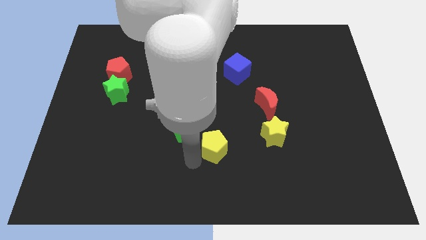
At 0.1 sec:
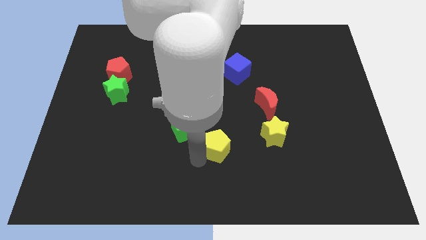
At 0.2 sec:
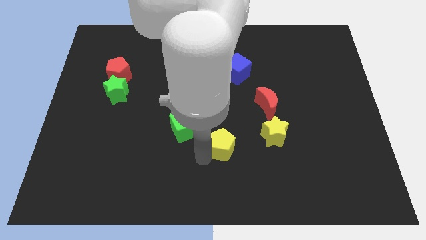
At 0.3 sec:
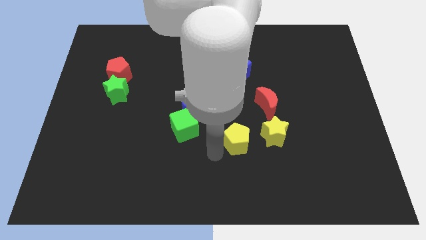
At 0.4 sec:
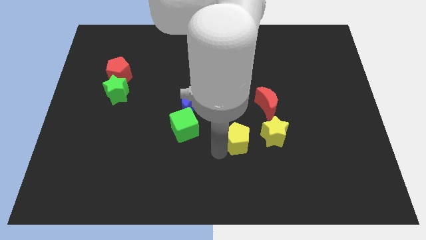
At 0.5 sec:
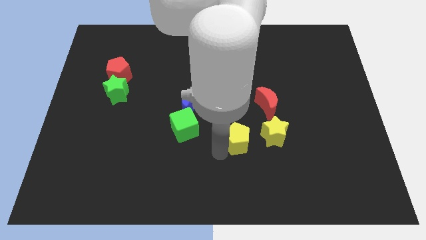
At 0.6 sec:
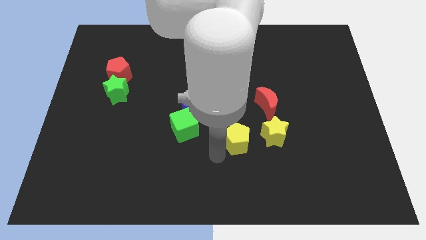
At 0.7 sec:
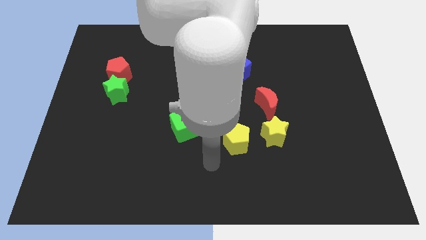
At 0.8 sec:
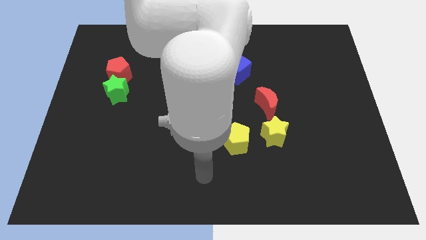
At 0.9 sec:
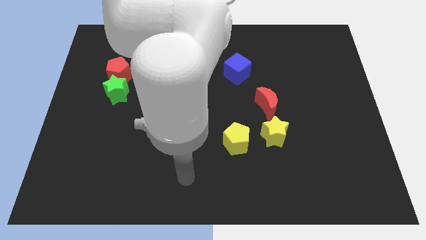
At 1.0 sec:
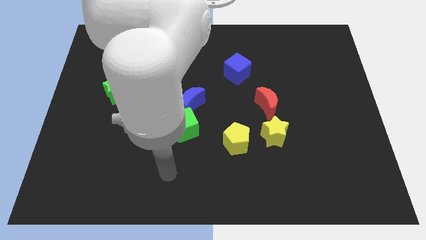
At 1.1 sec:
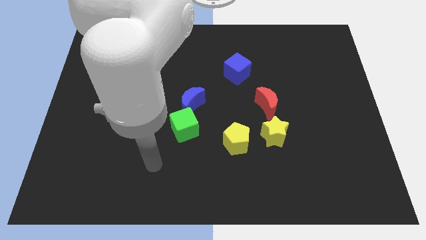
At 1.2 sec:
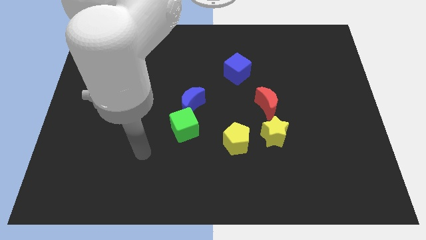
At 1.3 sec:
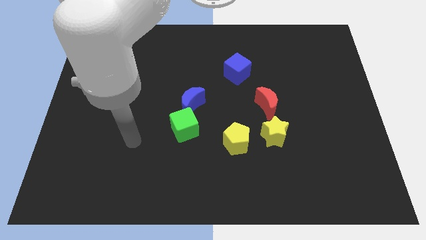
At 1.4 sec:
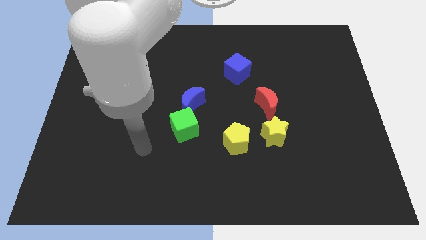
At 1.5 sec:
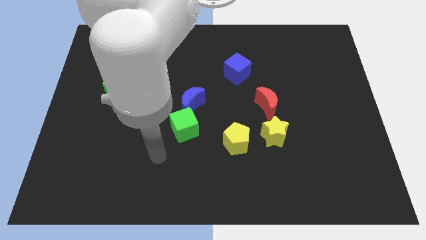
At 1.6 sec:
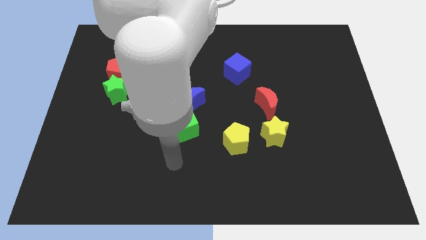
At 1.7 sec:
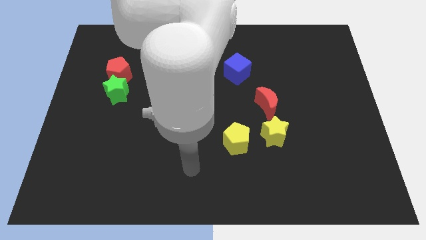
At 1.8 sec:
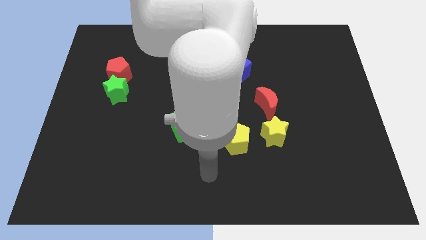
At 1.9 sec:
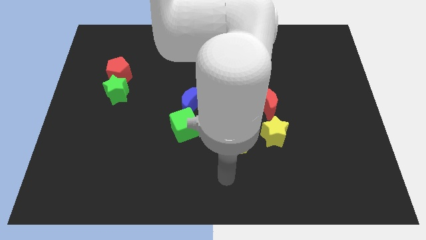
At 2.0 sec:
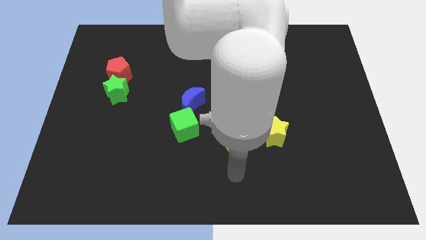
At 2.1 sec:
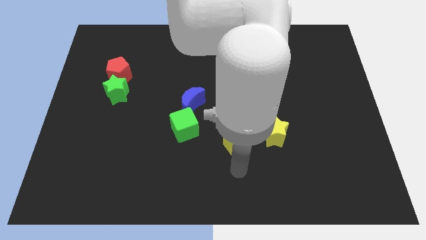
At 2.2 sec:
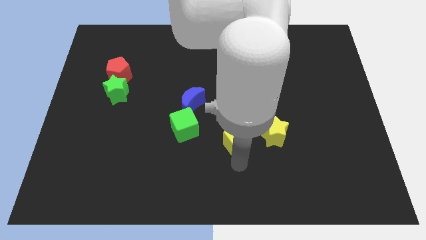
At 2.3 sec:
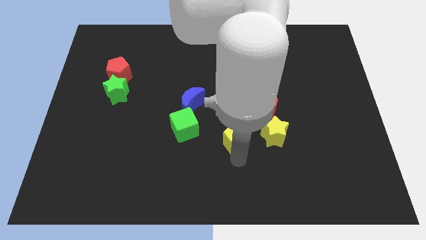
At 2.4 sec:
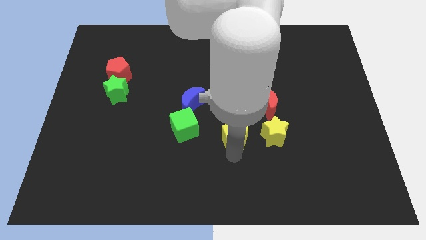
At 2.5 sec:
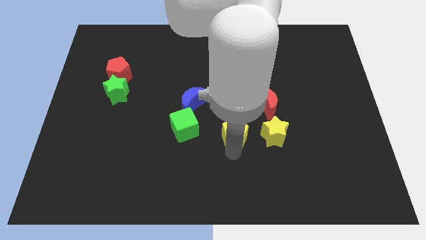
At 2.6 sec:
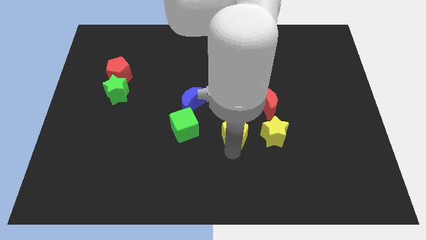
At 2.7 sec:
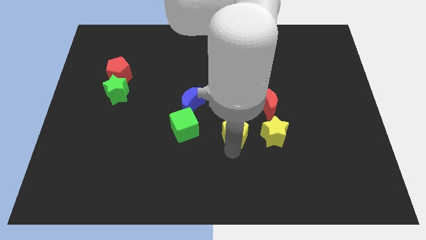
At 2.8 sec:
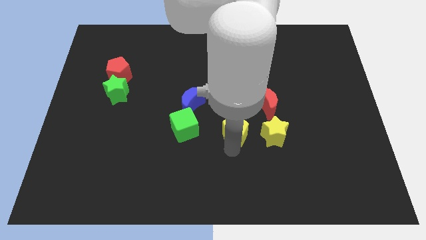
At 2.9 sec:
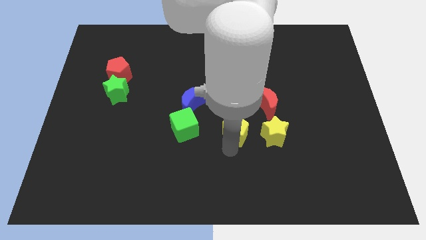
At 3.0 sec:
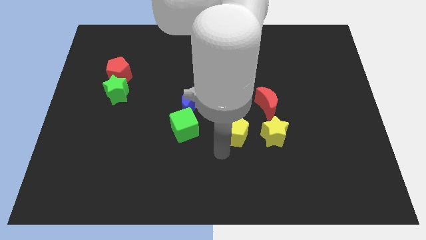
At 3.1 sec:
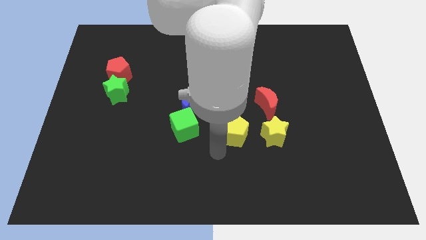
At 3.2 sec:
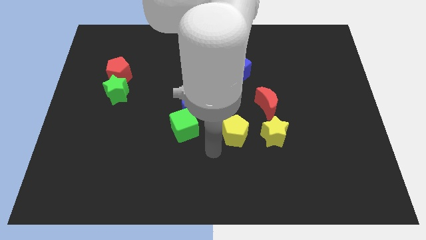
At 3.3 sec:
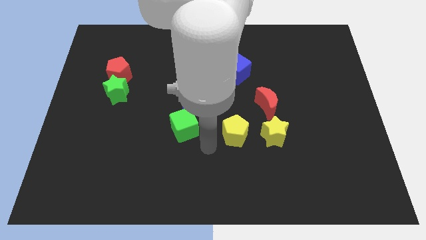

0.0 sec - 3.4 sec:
slightly push the yellow pentagon

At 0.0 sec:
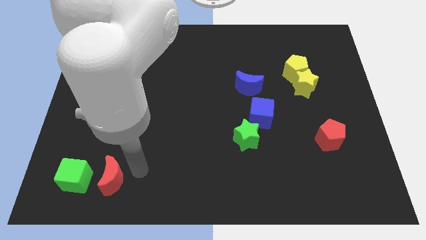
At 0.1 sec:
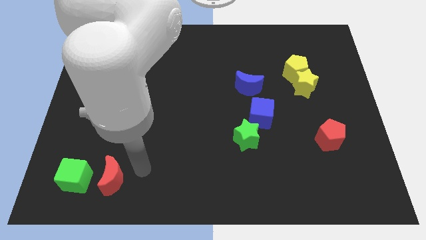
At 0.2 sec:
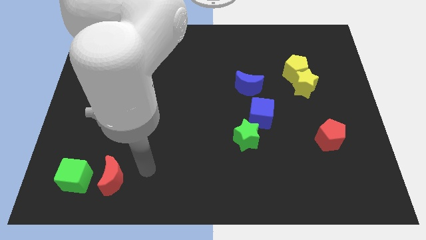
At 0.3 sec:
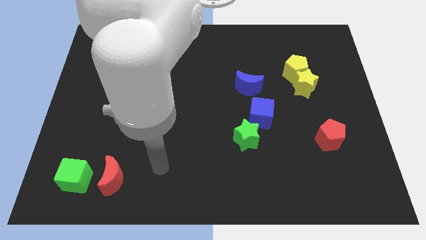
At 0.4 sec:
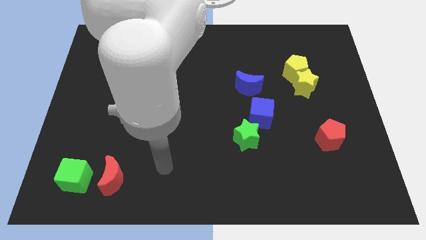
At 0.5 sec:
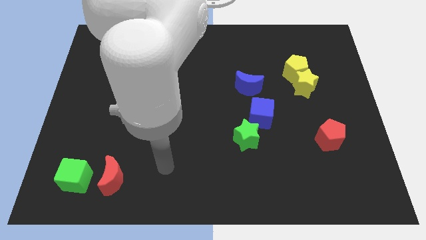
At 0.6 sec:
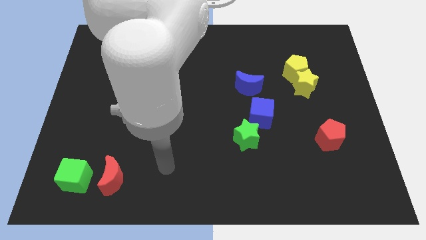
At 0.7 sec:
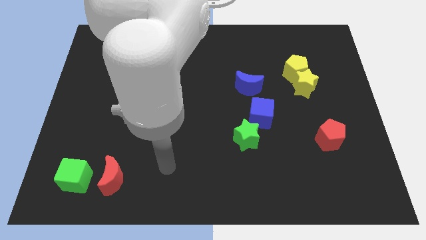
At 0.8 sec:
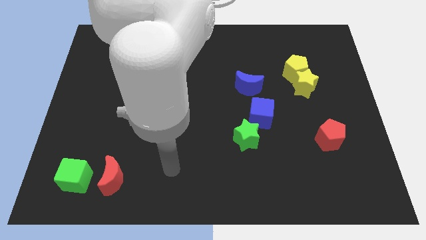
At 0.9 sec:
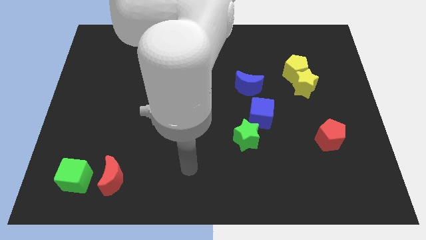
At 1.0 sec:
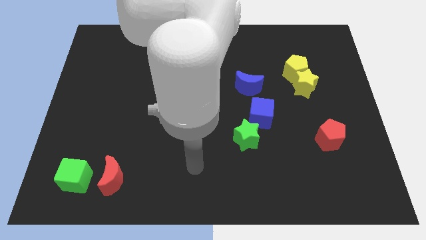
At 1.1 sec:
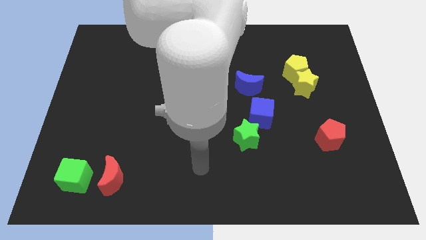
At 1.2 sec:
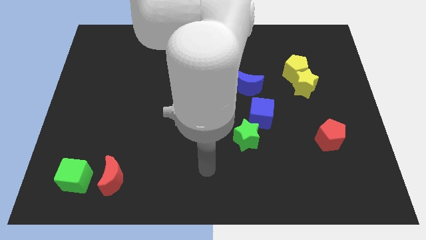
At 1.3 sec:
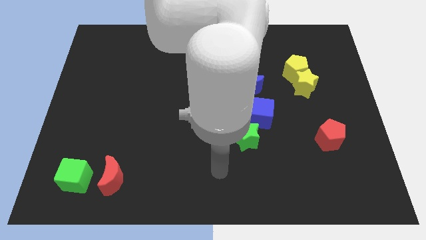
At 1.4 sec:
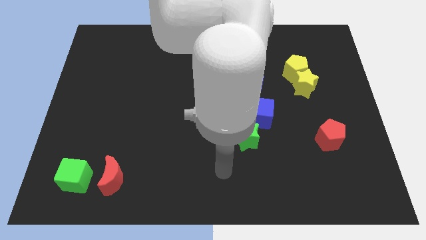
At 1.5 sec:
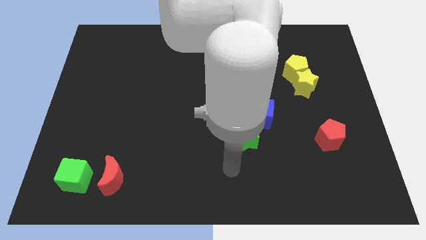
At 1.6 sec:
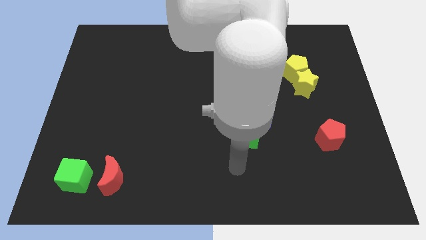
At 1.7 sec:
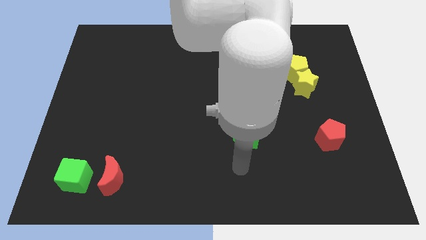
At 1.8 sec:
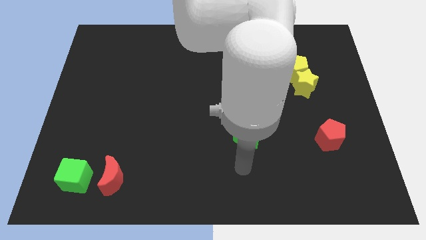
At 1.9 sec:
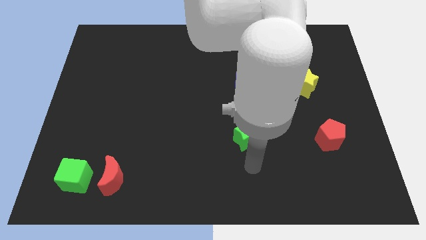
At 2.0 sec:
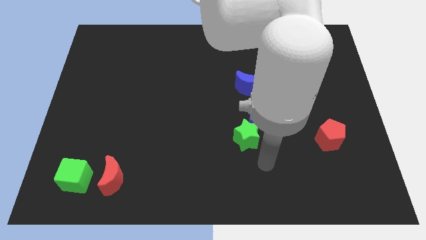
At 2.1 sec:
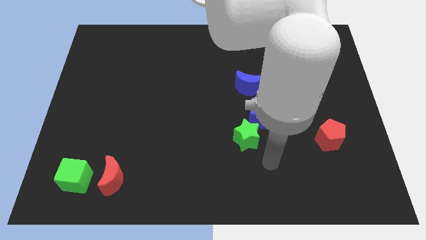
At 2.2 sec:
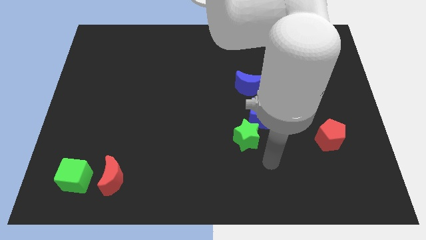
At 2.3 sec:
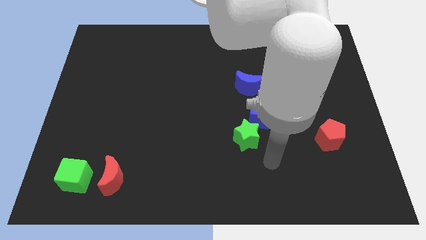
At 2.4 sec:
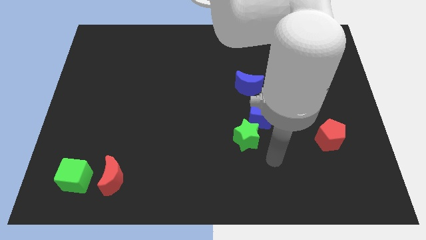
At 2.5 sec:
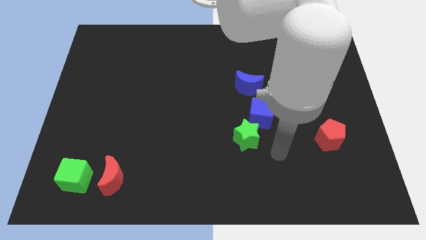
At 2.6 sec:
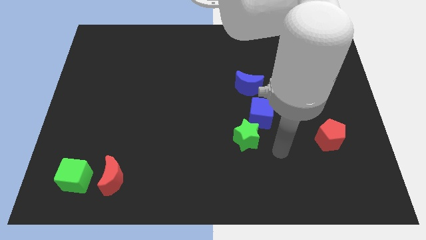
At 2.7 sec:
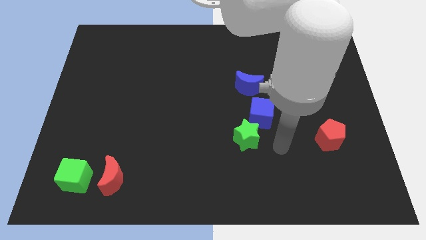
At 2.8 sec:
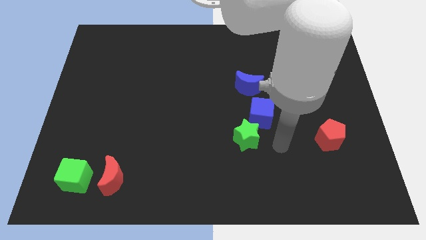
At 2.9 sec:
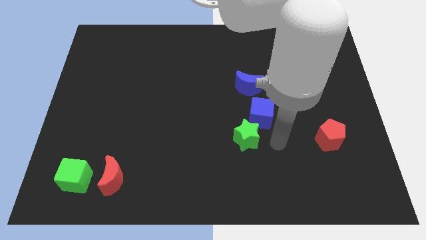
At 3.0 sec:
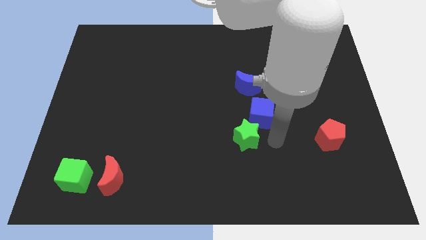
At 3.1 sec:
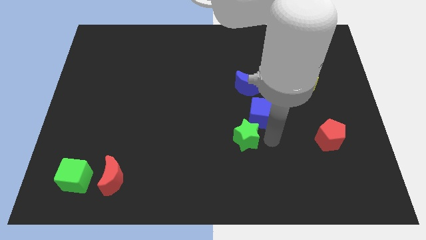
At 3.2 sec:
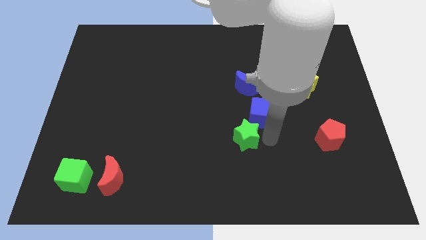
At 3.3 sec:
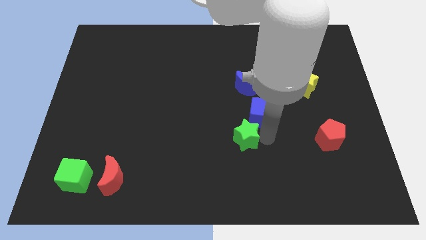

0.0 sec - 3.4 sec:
move arm to the right of green star

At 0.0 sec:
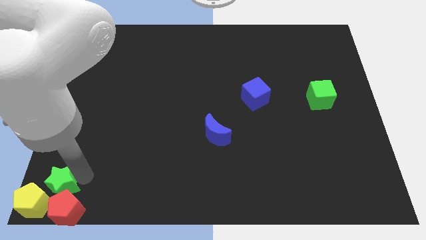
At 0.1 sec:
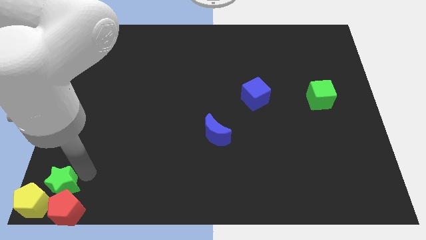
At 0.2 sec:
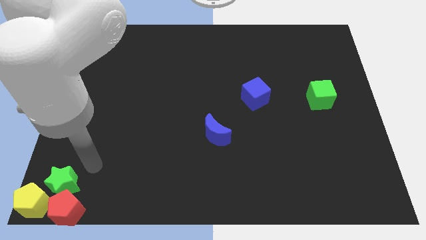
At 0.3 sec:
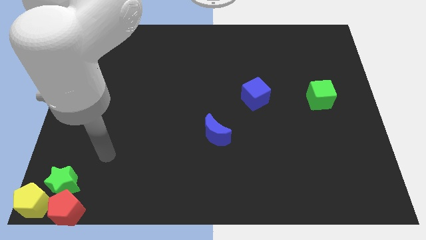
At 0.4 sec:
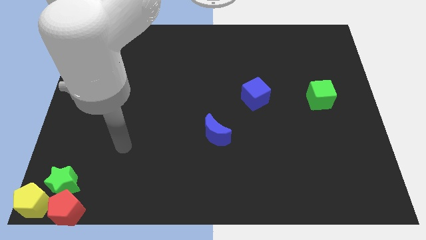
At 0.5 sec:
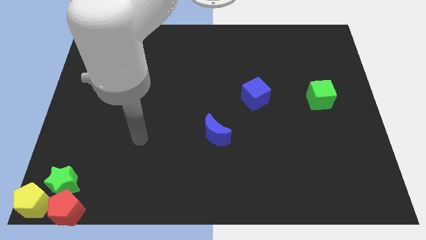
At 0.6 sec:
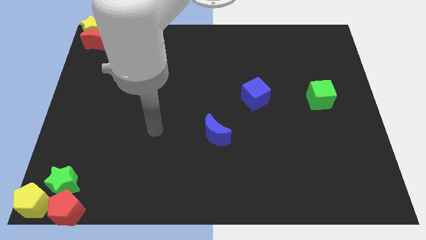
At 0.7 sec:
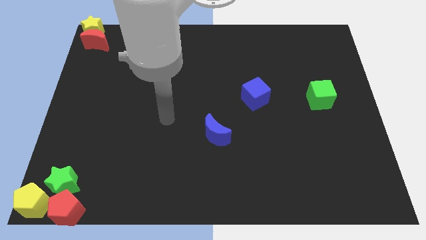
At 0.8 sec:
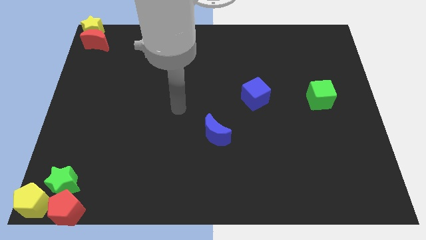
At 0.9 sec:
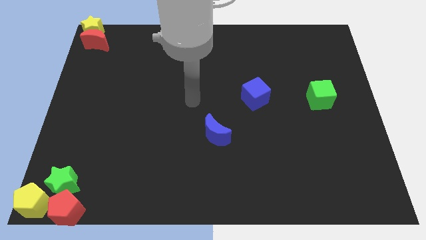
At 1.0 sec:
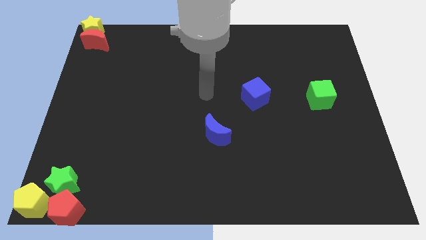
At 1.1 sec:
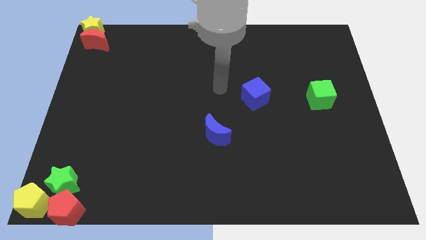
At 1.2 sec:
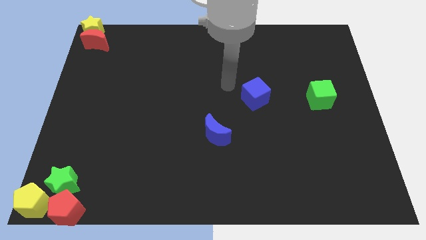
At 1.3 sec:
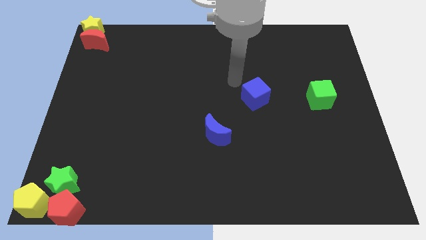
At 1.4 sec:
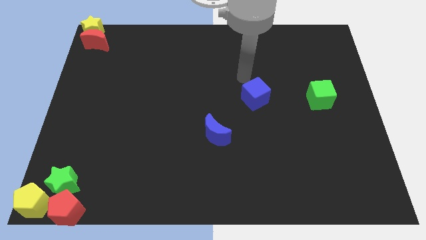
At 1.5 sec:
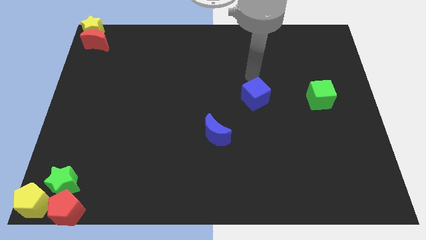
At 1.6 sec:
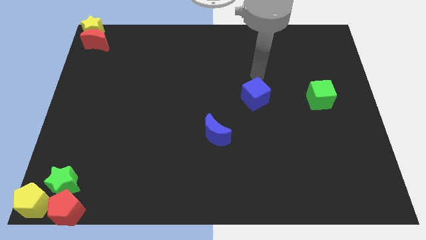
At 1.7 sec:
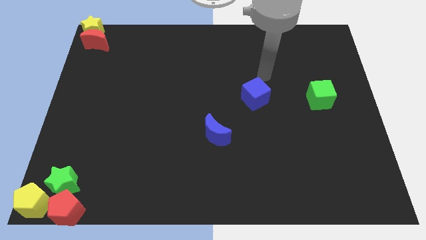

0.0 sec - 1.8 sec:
push your hand vertically above the blue cube

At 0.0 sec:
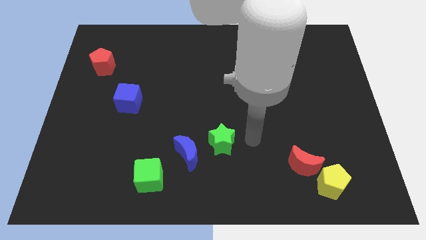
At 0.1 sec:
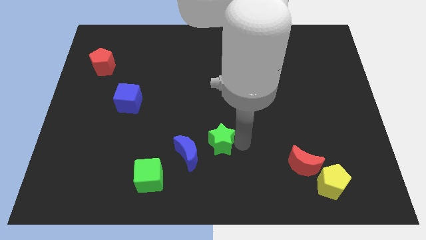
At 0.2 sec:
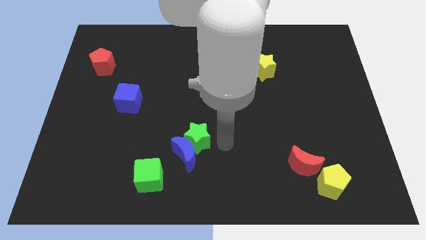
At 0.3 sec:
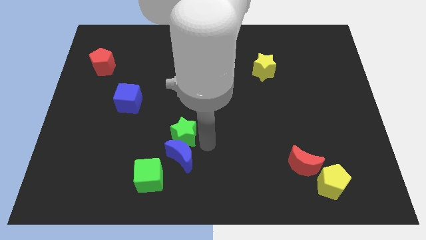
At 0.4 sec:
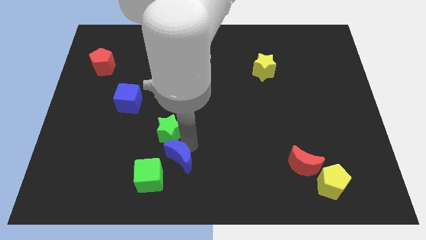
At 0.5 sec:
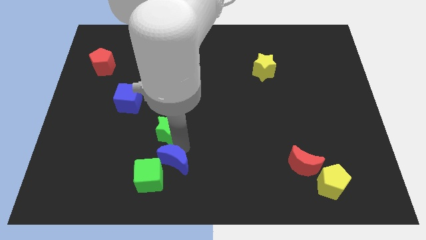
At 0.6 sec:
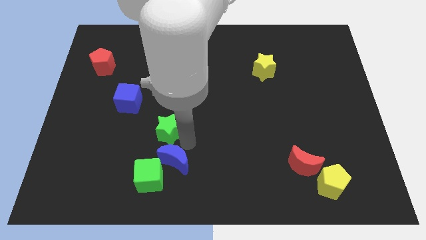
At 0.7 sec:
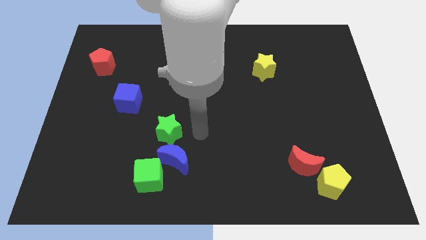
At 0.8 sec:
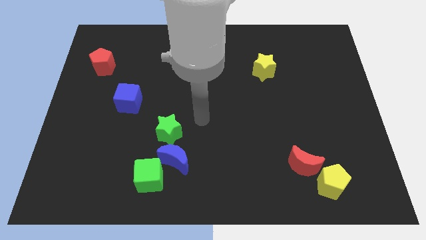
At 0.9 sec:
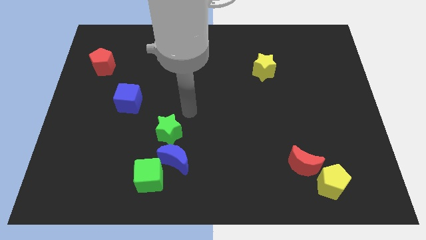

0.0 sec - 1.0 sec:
place the green star above the blue moon
